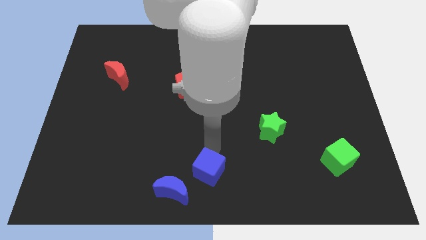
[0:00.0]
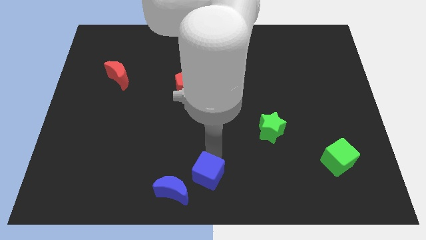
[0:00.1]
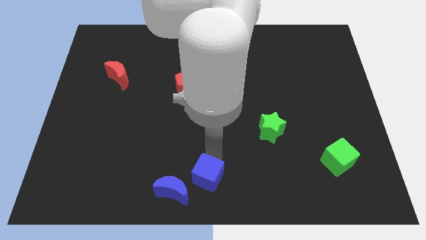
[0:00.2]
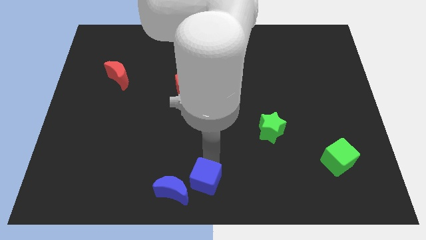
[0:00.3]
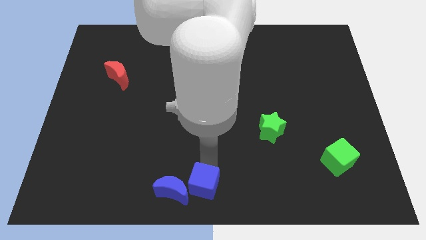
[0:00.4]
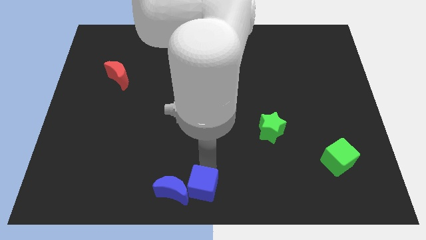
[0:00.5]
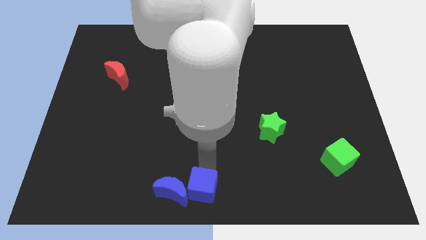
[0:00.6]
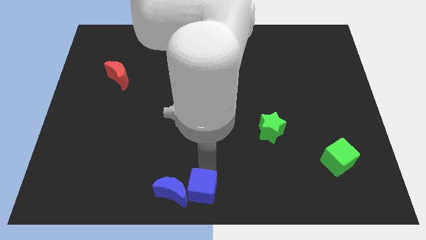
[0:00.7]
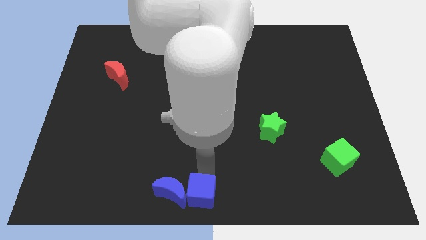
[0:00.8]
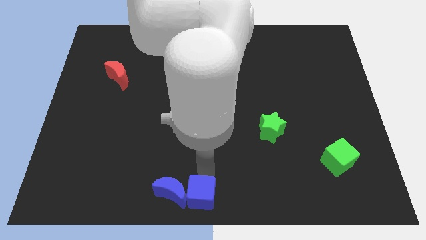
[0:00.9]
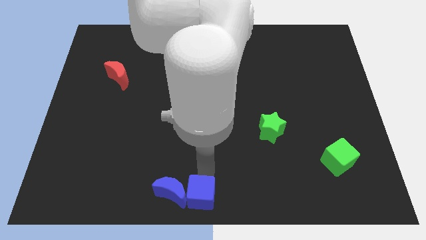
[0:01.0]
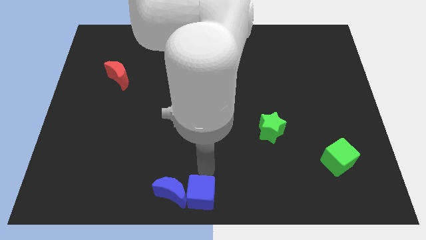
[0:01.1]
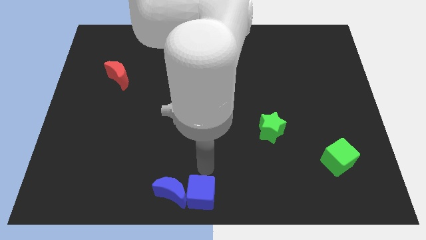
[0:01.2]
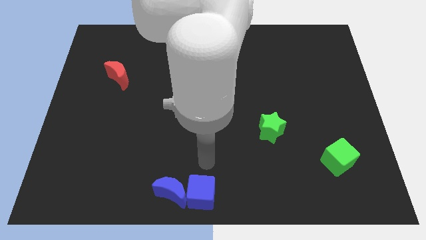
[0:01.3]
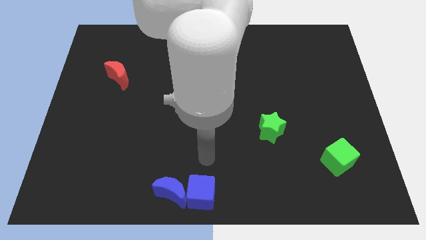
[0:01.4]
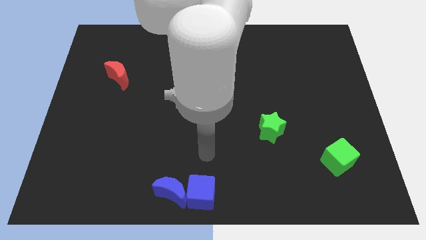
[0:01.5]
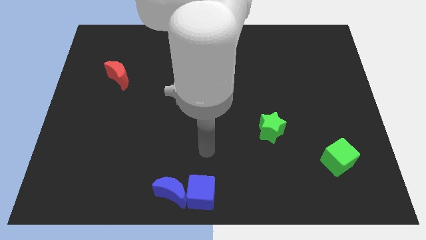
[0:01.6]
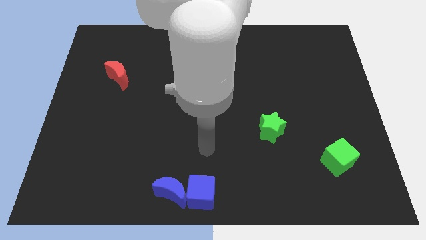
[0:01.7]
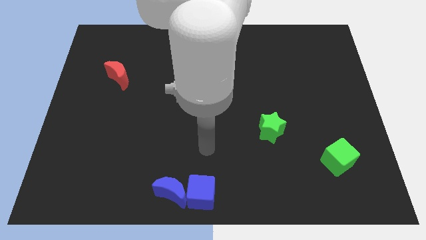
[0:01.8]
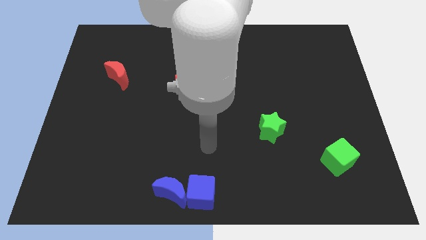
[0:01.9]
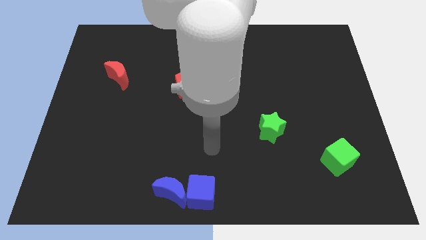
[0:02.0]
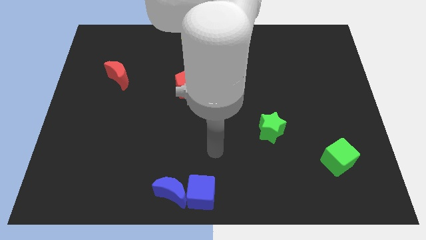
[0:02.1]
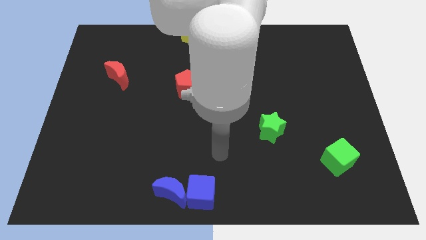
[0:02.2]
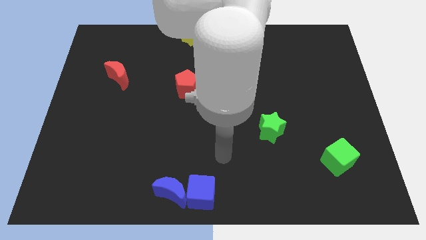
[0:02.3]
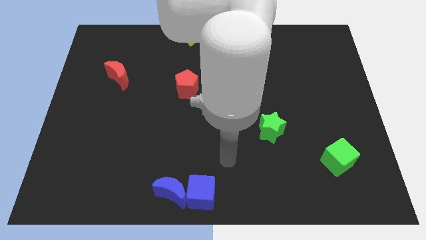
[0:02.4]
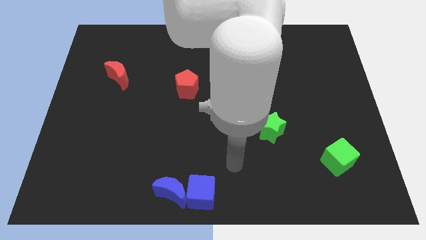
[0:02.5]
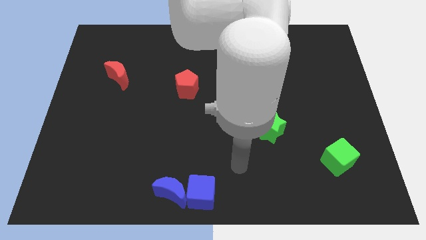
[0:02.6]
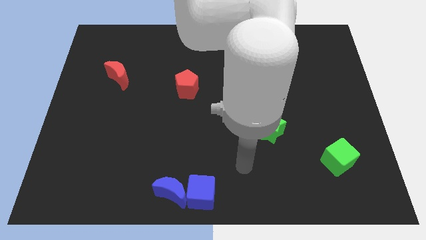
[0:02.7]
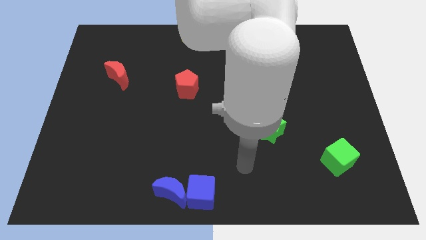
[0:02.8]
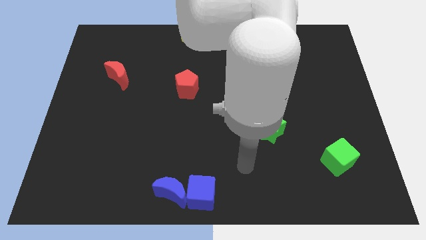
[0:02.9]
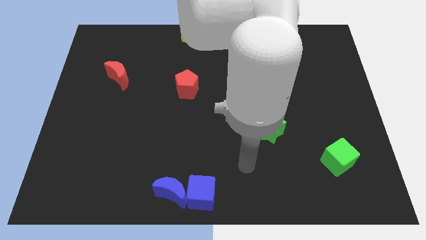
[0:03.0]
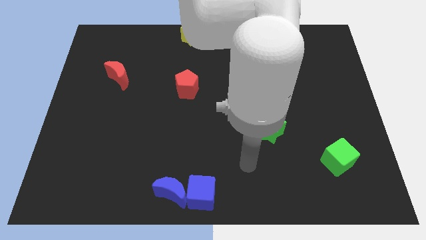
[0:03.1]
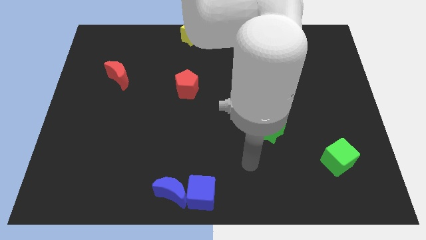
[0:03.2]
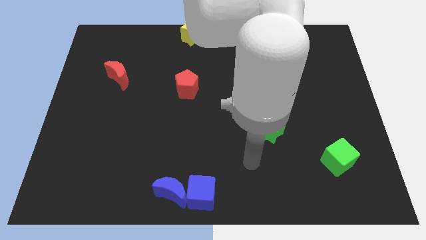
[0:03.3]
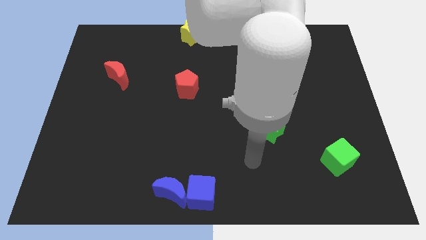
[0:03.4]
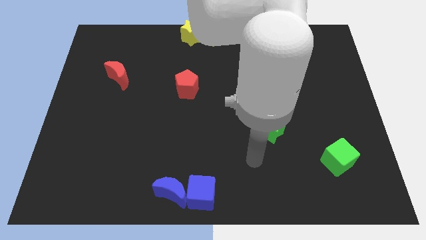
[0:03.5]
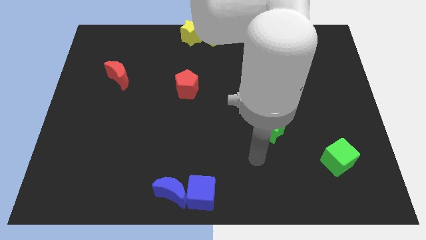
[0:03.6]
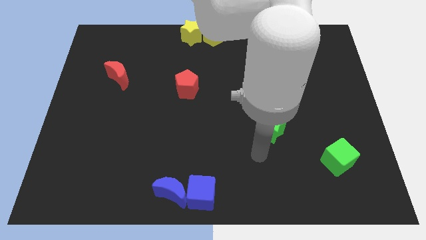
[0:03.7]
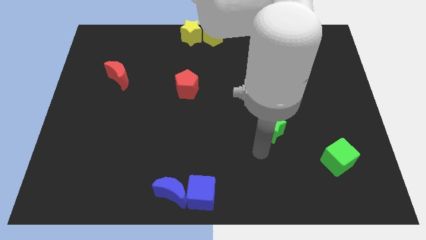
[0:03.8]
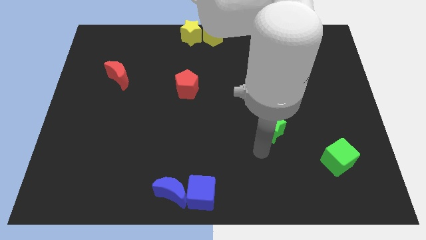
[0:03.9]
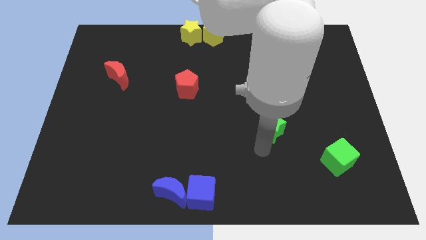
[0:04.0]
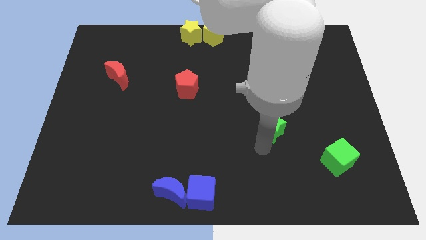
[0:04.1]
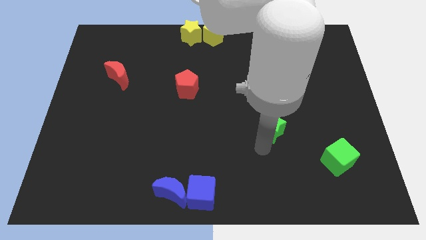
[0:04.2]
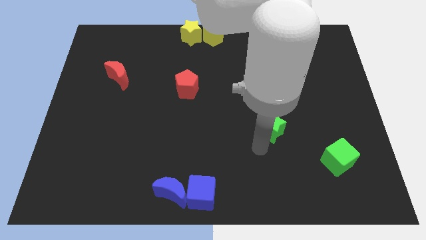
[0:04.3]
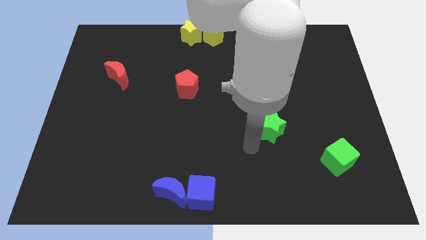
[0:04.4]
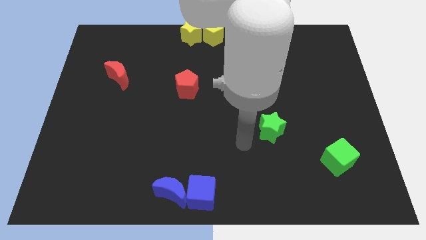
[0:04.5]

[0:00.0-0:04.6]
place blue cube to the bottom left

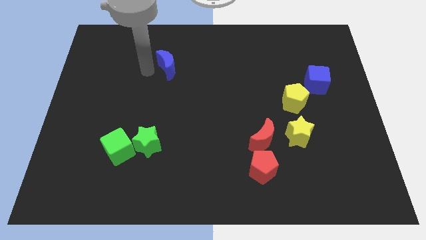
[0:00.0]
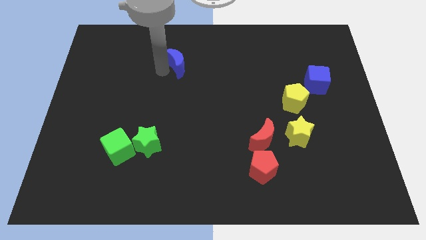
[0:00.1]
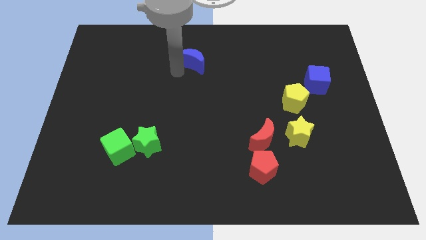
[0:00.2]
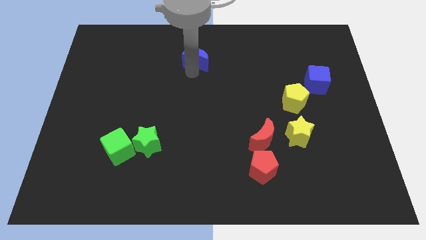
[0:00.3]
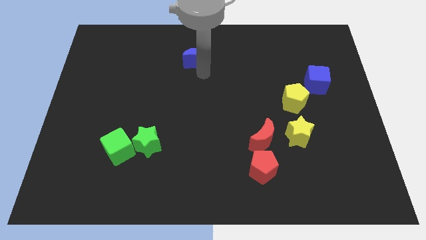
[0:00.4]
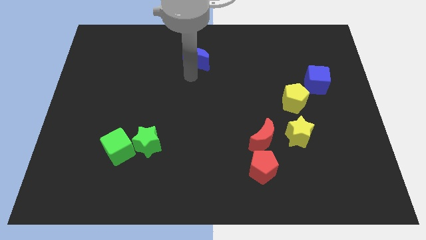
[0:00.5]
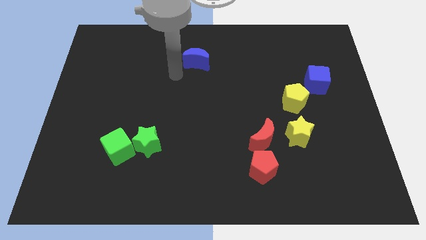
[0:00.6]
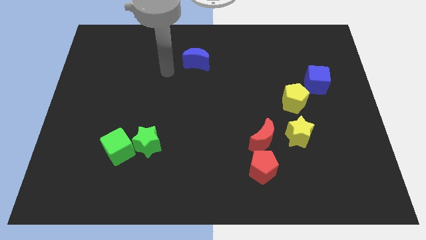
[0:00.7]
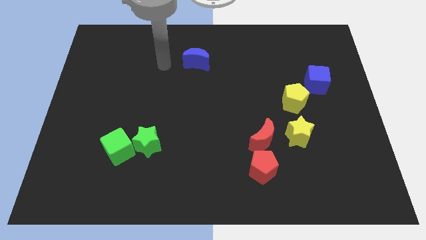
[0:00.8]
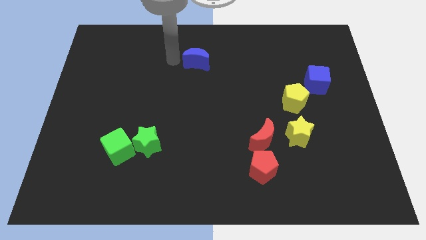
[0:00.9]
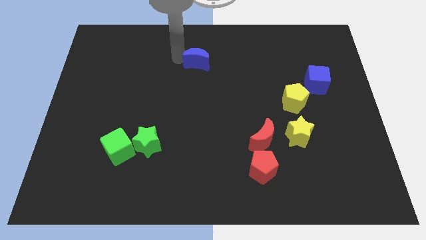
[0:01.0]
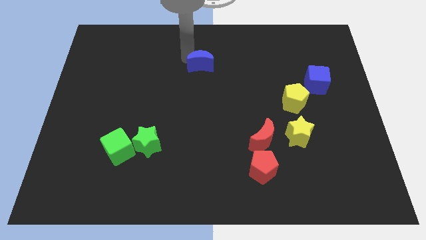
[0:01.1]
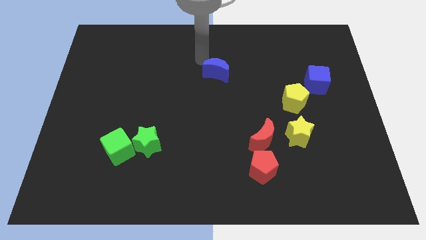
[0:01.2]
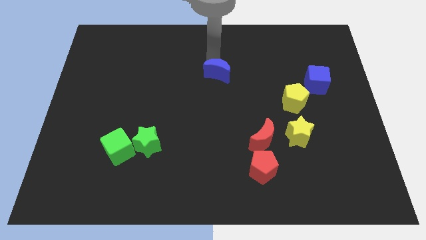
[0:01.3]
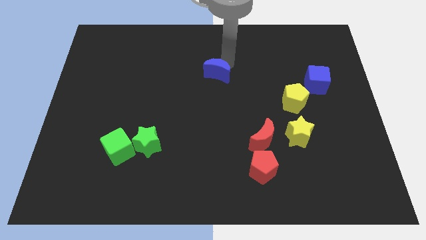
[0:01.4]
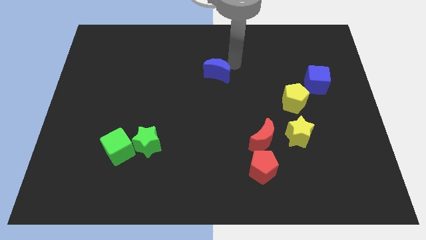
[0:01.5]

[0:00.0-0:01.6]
slightly push the blue crescent to the right side

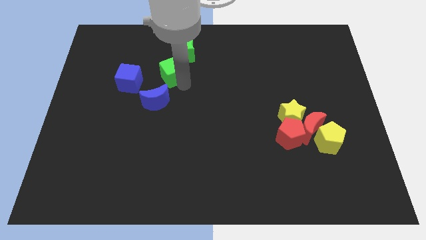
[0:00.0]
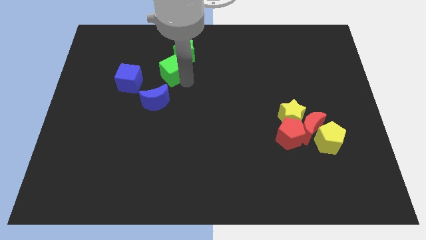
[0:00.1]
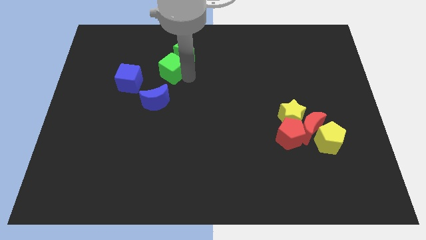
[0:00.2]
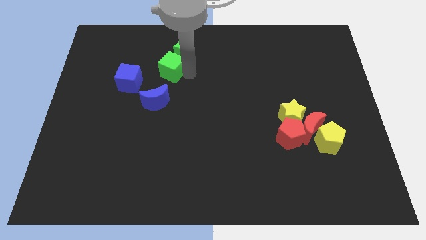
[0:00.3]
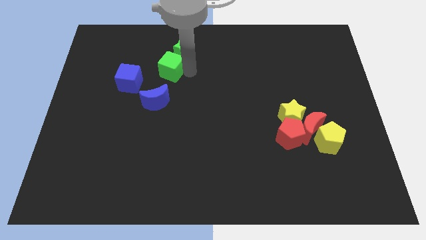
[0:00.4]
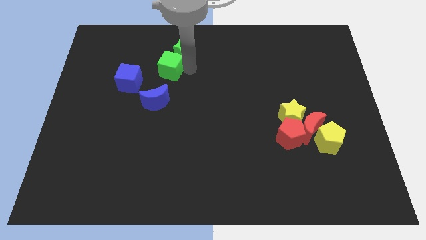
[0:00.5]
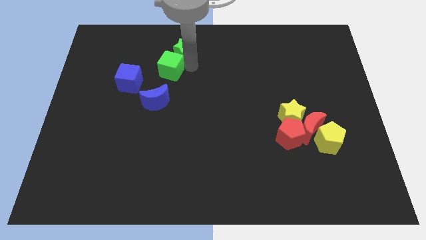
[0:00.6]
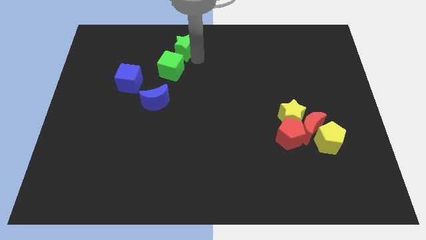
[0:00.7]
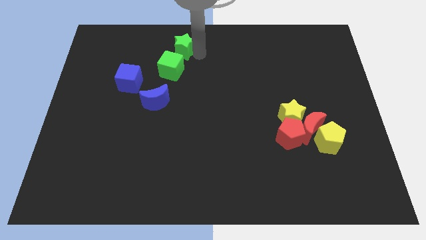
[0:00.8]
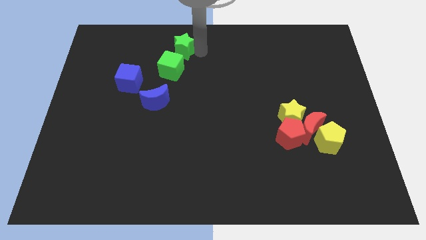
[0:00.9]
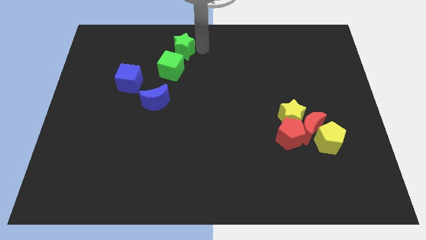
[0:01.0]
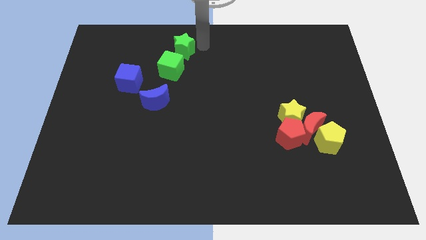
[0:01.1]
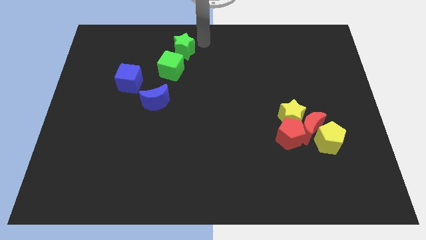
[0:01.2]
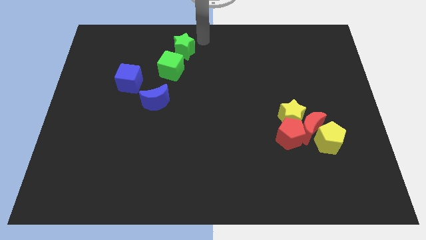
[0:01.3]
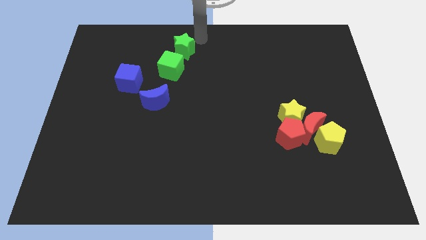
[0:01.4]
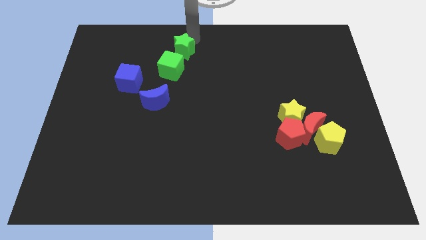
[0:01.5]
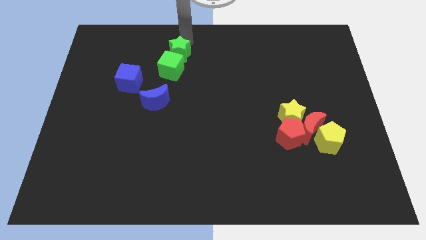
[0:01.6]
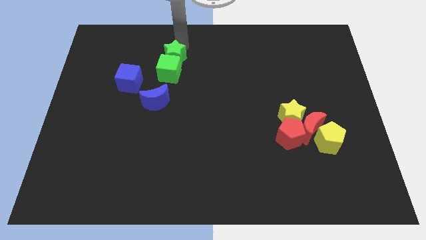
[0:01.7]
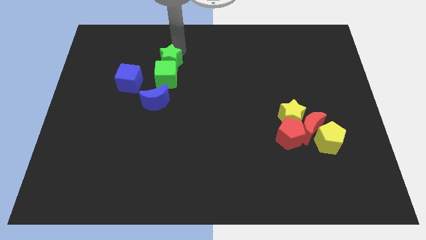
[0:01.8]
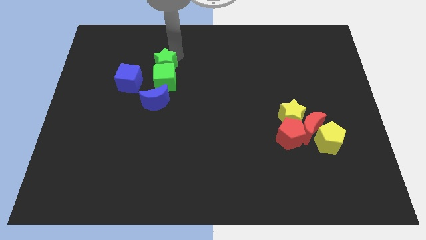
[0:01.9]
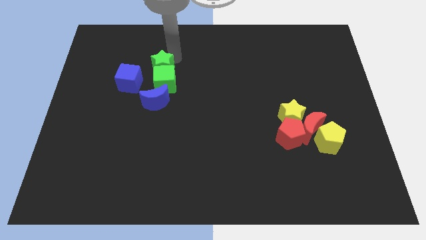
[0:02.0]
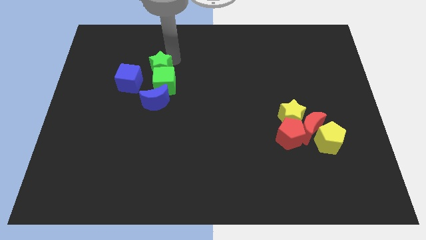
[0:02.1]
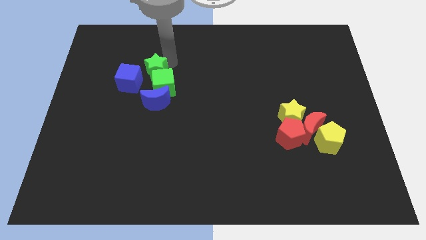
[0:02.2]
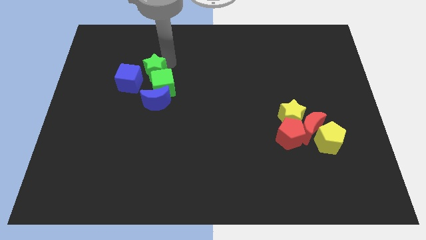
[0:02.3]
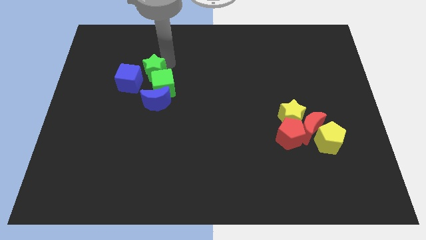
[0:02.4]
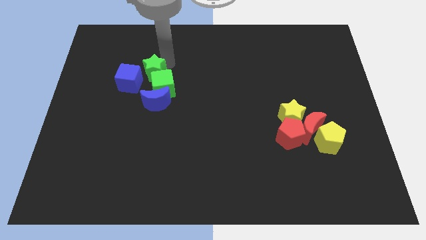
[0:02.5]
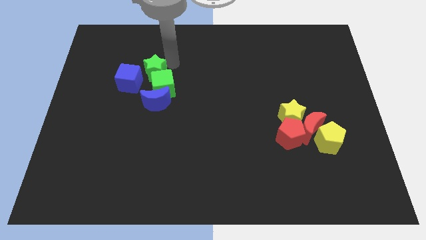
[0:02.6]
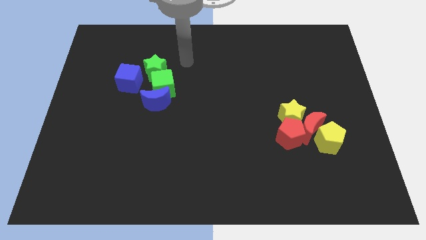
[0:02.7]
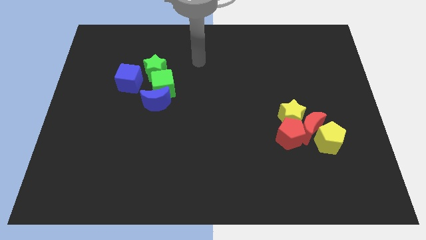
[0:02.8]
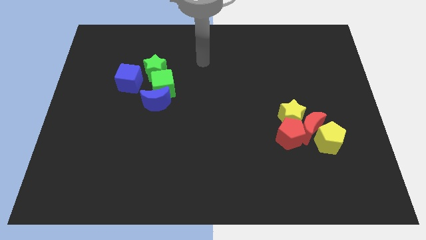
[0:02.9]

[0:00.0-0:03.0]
push the green blocks towards the blue moon
